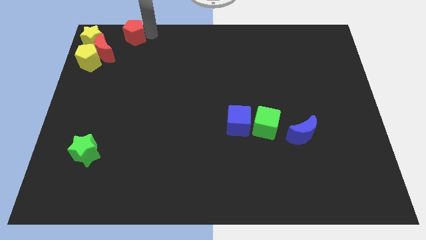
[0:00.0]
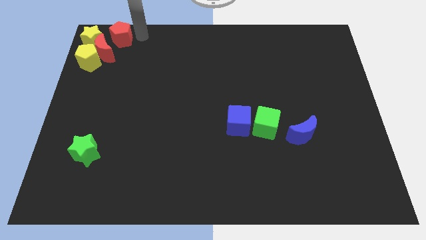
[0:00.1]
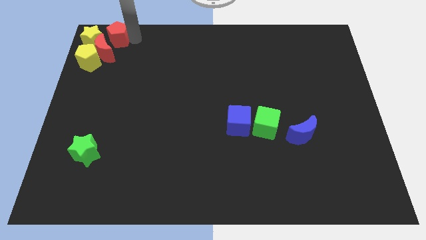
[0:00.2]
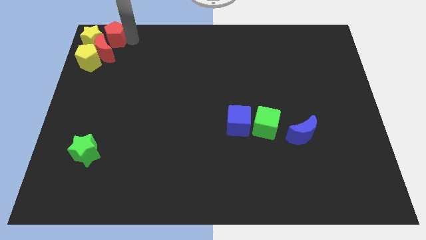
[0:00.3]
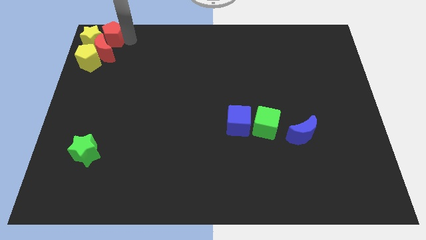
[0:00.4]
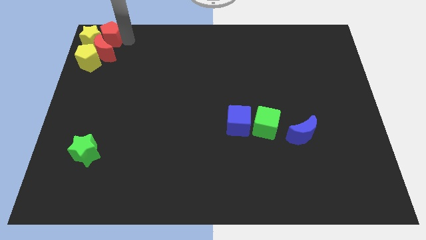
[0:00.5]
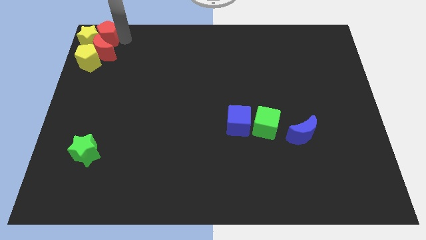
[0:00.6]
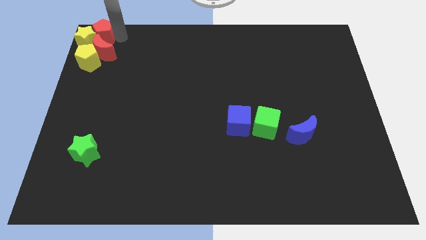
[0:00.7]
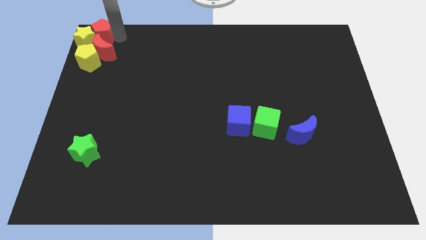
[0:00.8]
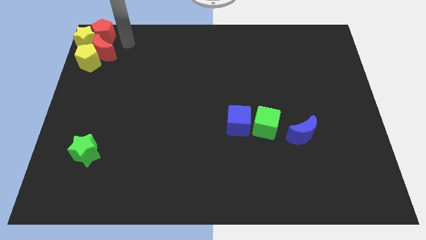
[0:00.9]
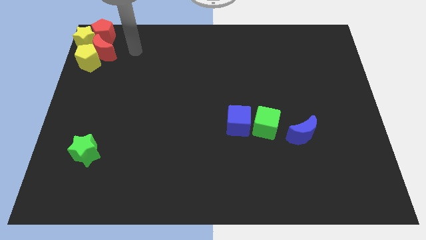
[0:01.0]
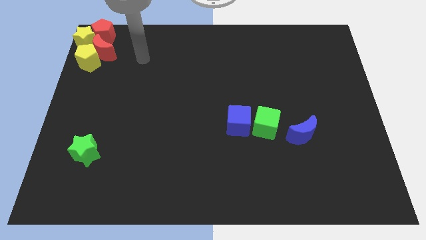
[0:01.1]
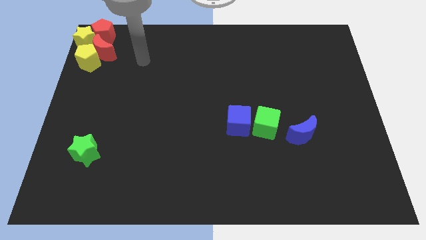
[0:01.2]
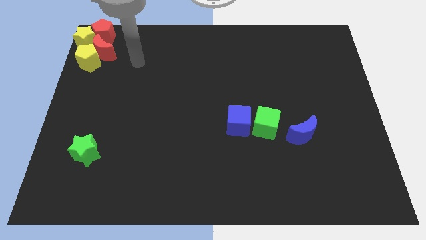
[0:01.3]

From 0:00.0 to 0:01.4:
push the red pentagon to the top left of the board

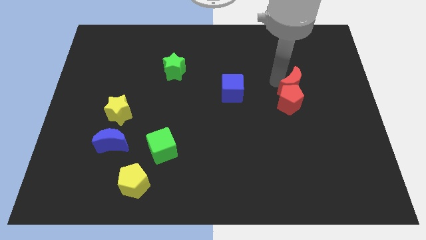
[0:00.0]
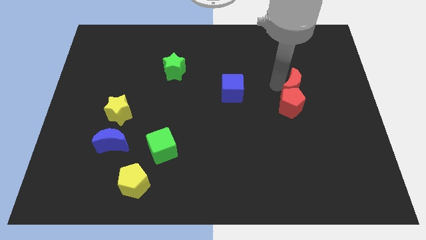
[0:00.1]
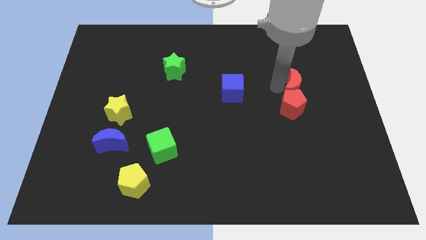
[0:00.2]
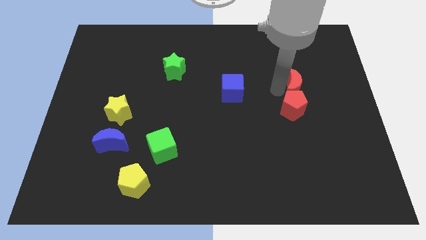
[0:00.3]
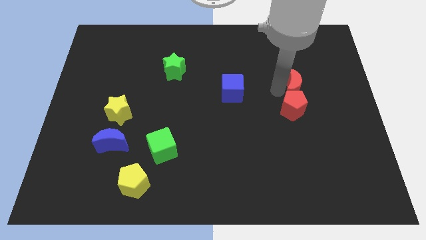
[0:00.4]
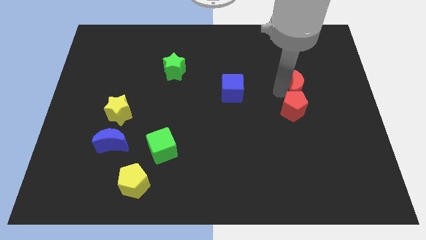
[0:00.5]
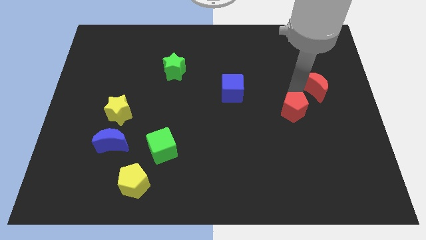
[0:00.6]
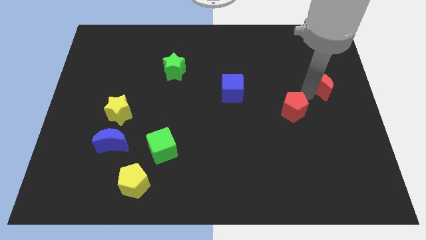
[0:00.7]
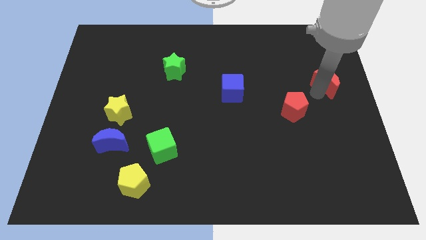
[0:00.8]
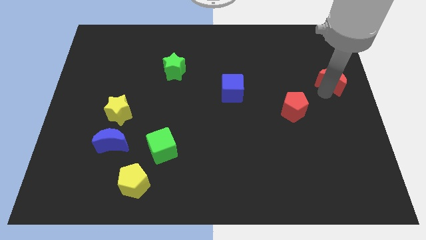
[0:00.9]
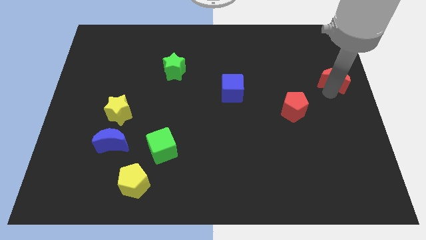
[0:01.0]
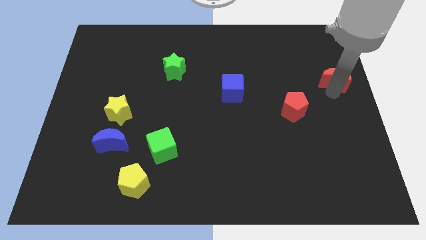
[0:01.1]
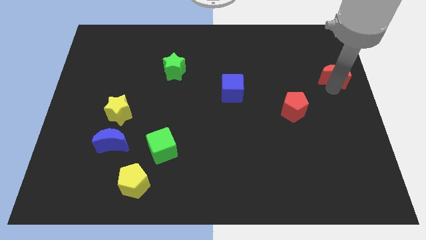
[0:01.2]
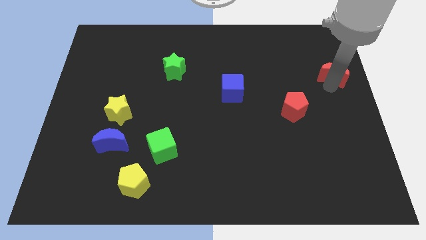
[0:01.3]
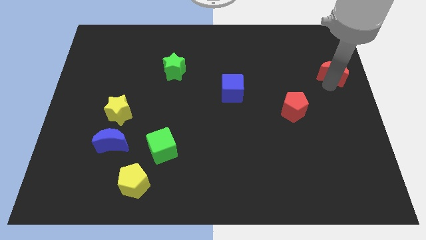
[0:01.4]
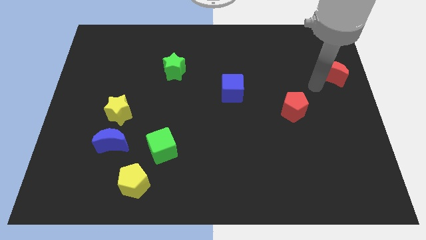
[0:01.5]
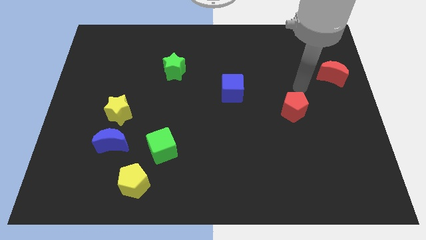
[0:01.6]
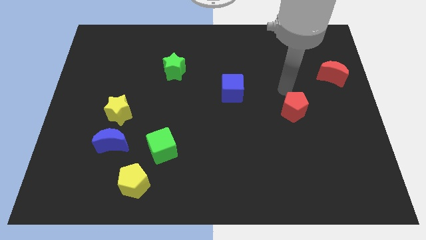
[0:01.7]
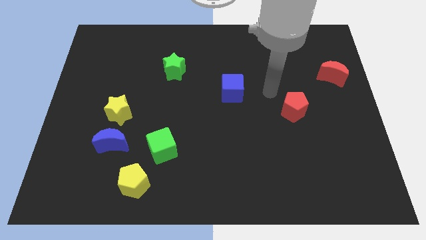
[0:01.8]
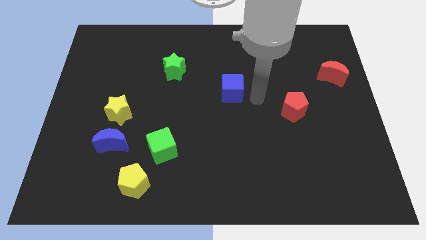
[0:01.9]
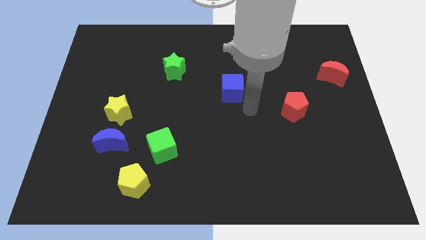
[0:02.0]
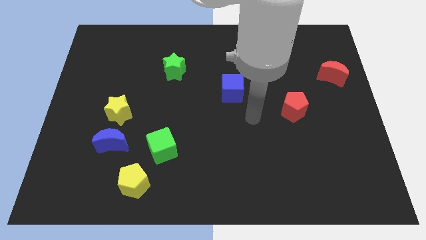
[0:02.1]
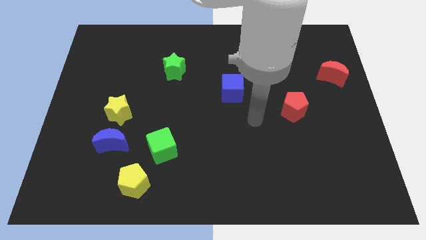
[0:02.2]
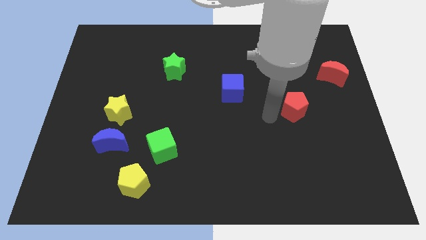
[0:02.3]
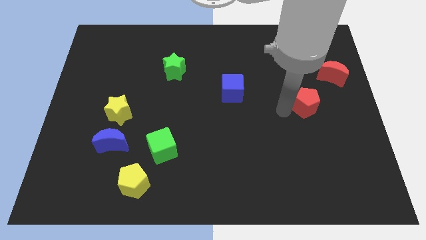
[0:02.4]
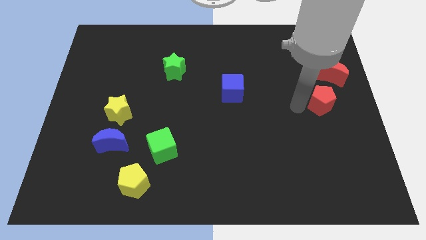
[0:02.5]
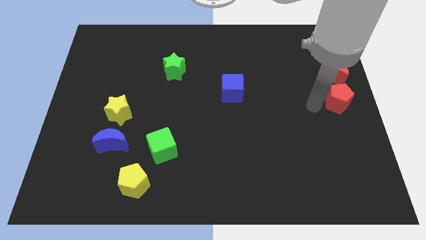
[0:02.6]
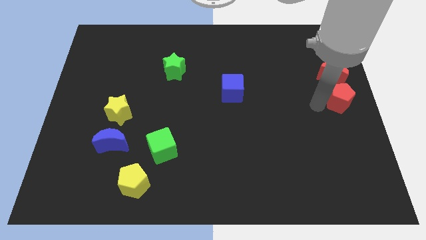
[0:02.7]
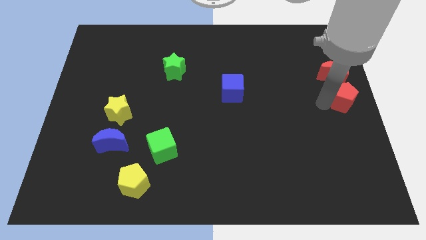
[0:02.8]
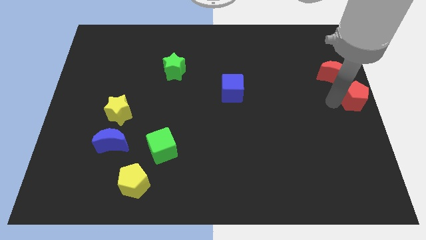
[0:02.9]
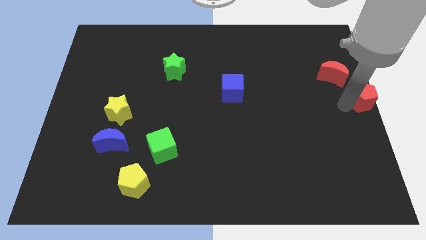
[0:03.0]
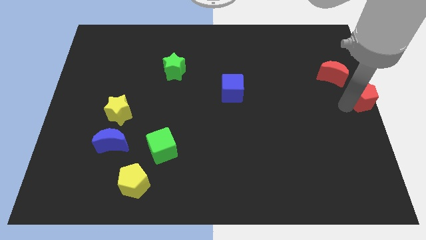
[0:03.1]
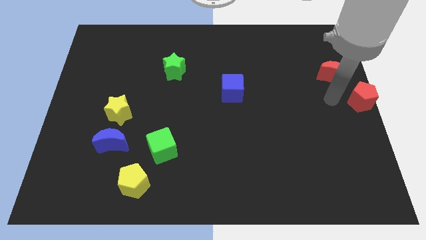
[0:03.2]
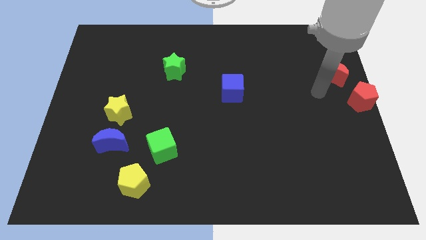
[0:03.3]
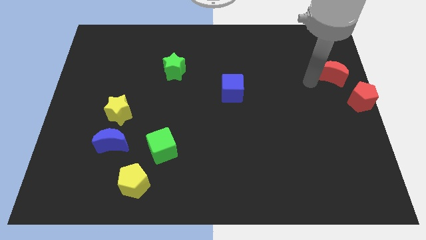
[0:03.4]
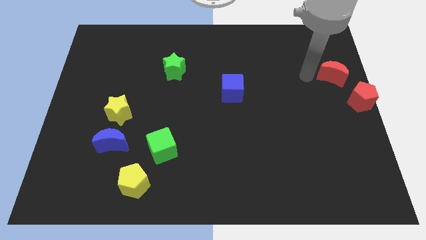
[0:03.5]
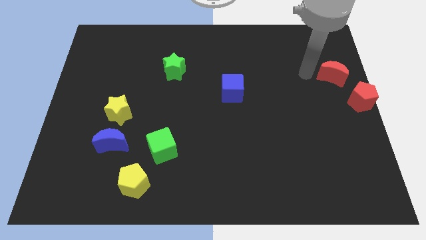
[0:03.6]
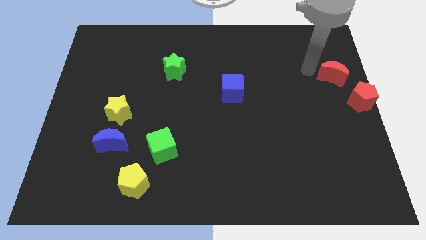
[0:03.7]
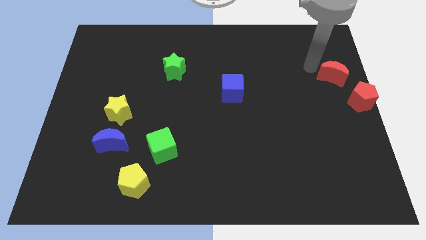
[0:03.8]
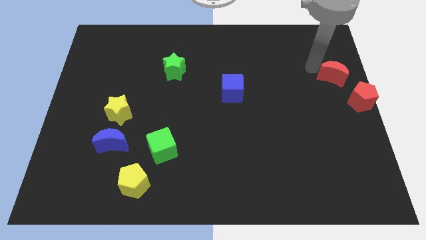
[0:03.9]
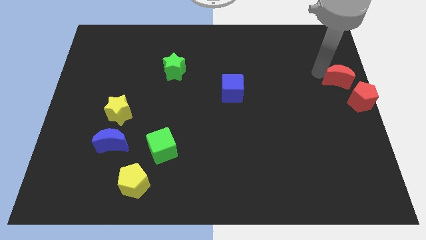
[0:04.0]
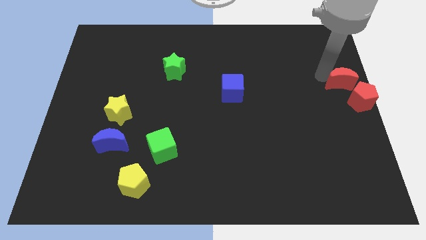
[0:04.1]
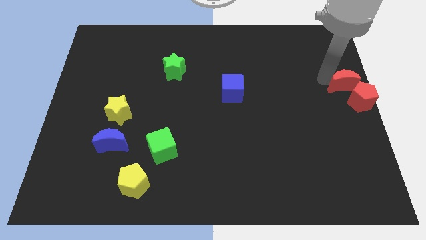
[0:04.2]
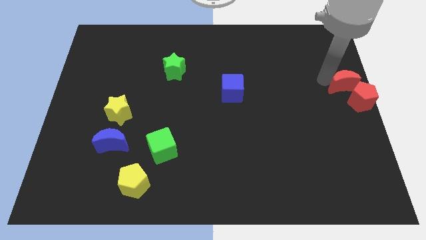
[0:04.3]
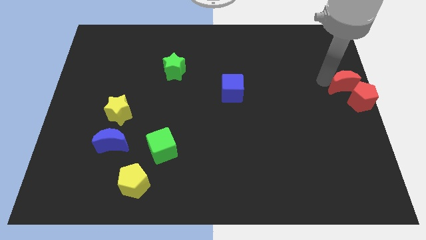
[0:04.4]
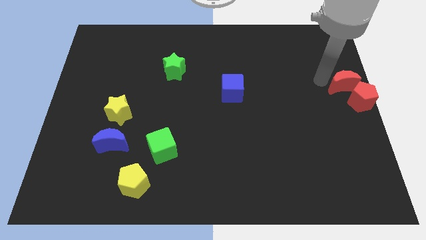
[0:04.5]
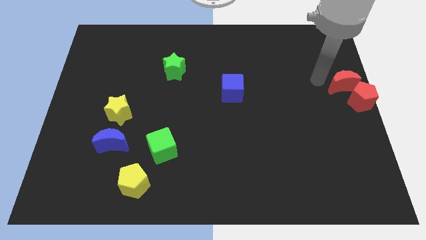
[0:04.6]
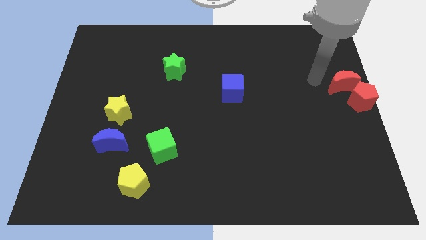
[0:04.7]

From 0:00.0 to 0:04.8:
move red blocks to the right center of the board

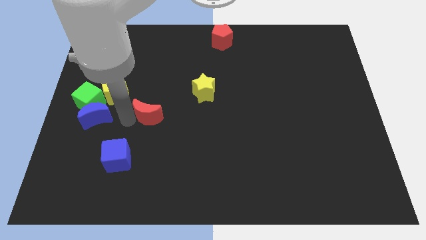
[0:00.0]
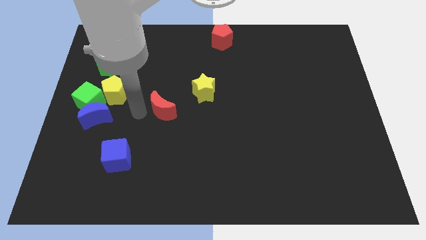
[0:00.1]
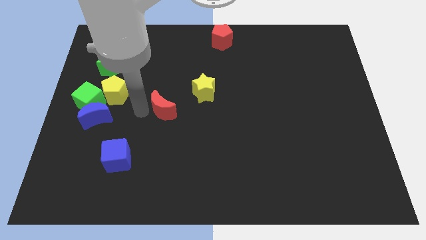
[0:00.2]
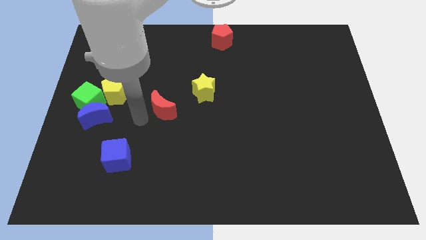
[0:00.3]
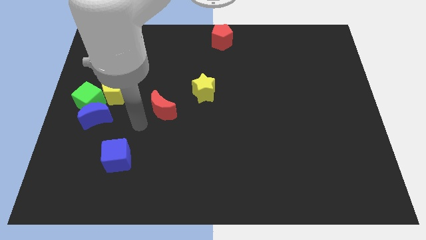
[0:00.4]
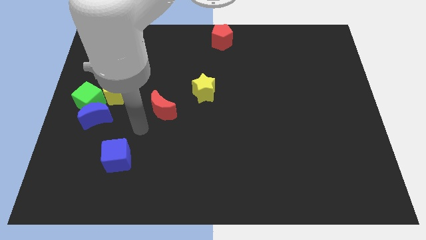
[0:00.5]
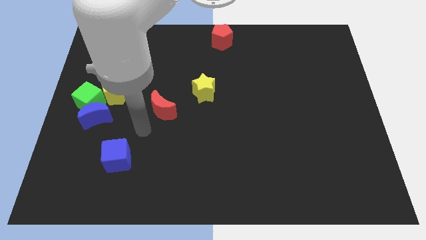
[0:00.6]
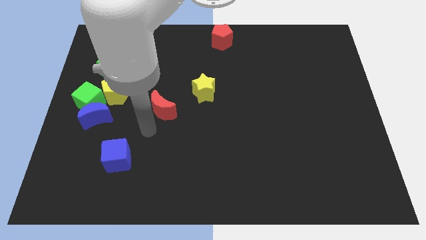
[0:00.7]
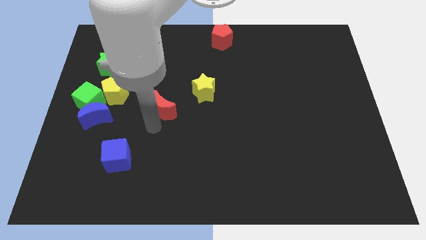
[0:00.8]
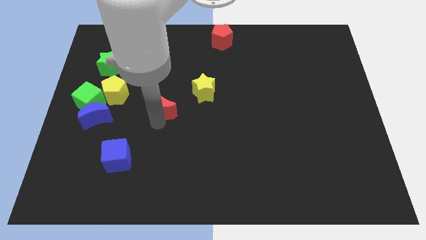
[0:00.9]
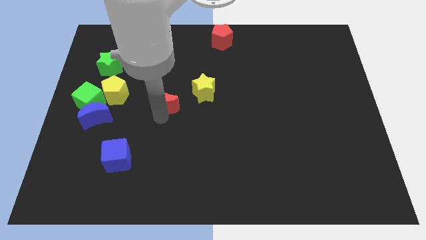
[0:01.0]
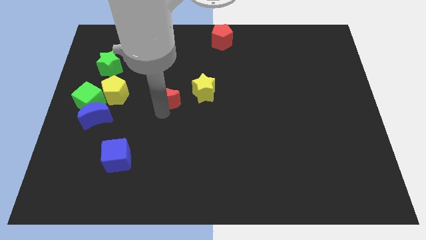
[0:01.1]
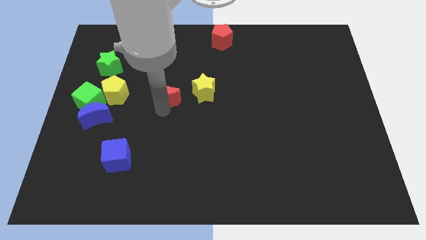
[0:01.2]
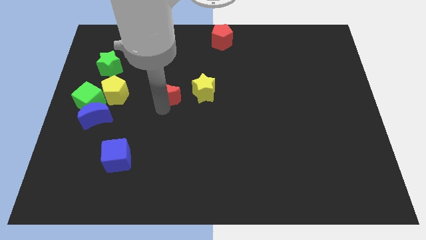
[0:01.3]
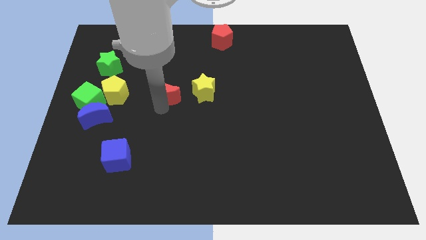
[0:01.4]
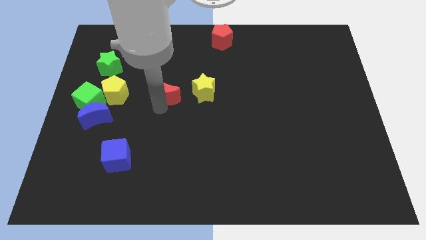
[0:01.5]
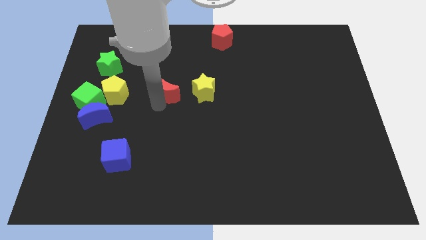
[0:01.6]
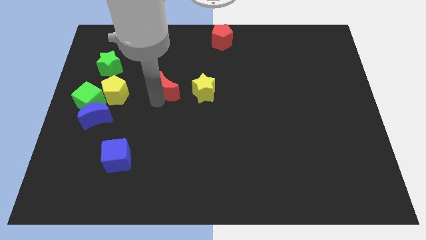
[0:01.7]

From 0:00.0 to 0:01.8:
place the red crescent to the left of the yellow star

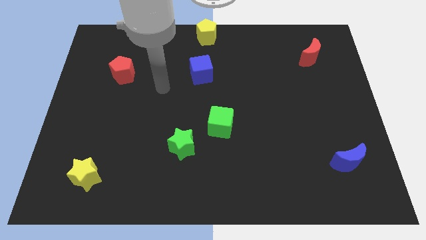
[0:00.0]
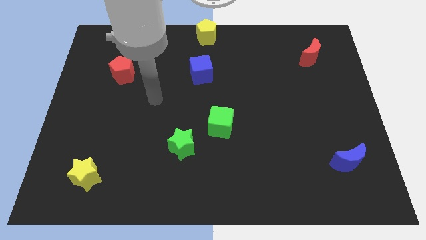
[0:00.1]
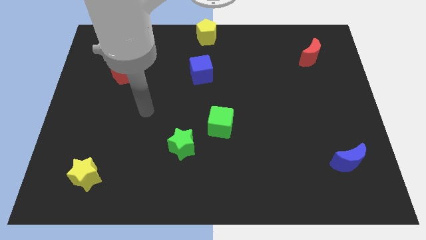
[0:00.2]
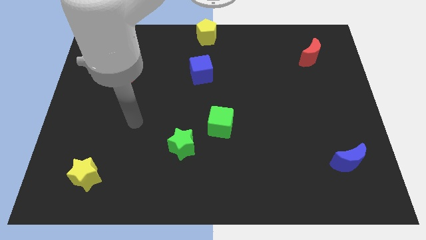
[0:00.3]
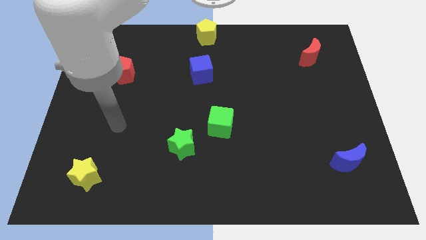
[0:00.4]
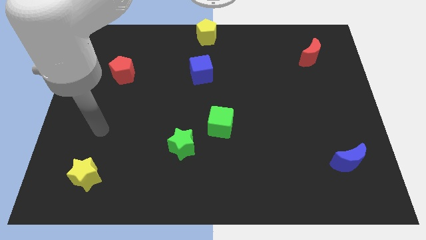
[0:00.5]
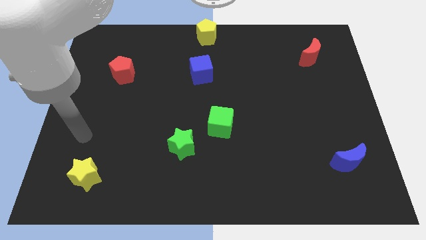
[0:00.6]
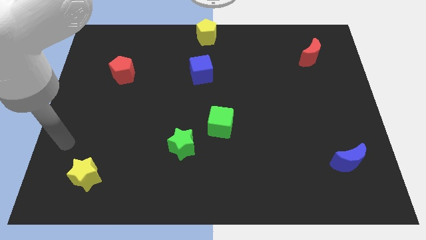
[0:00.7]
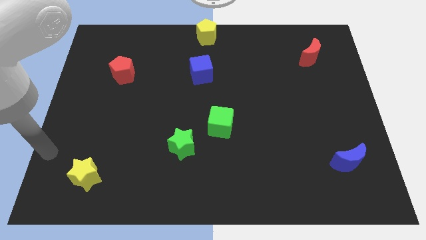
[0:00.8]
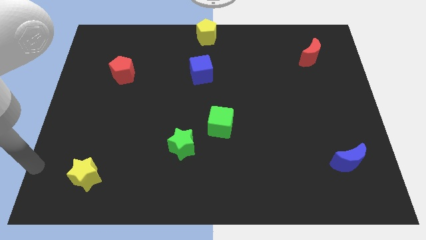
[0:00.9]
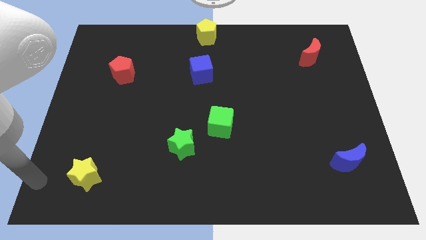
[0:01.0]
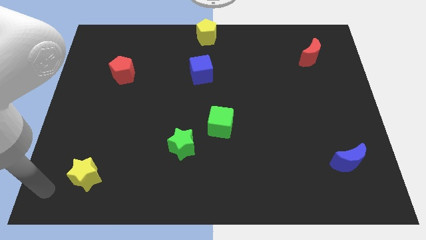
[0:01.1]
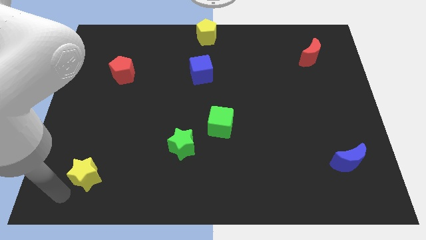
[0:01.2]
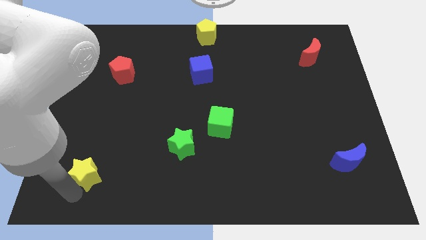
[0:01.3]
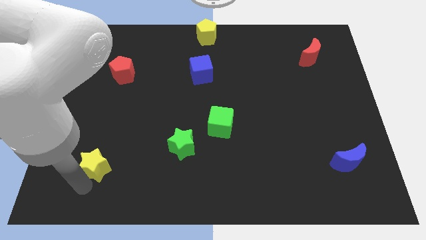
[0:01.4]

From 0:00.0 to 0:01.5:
place your arm to the bottom of the yellow star
